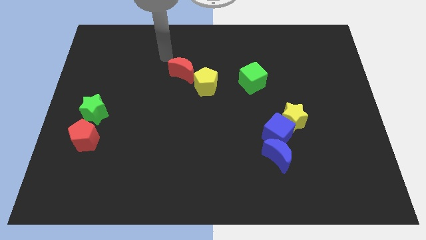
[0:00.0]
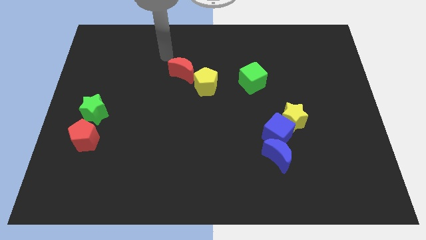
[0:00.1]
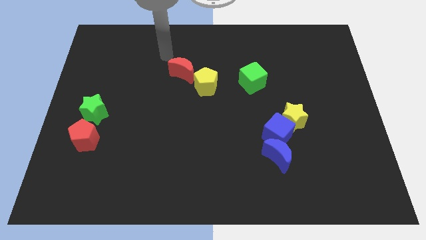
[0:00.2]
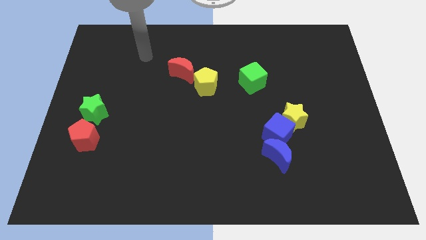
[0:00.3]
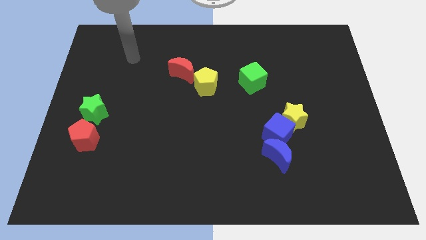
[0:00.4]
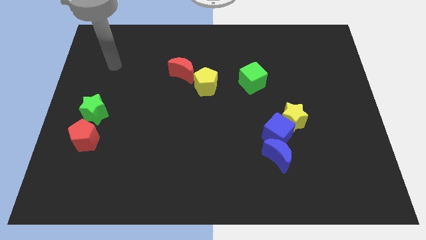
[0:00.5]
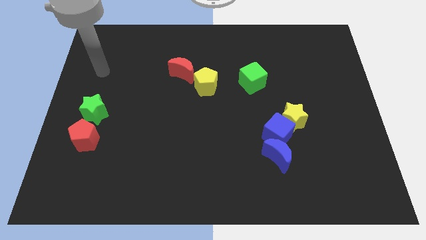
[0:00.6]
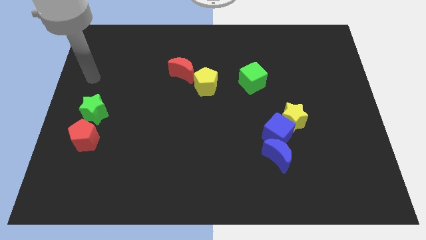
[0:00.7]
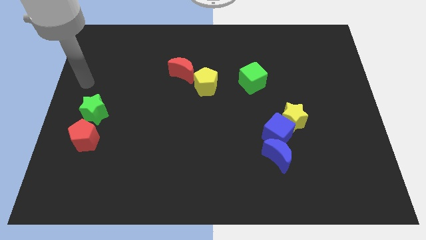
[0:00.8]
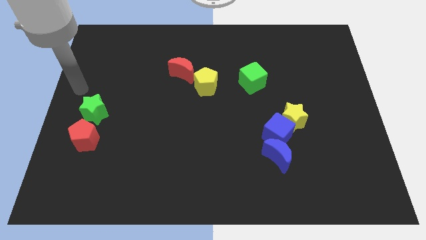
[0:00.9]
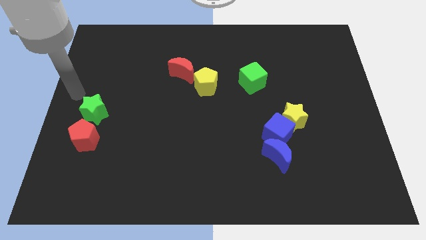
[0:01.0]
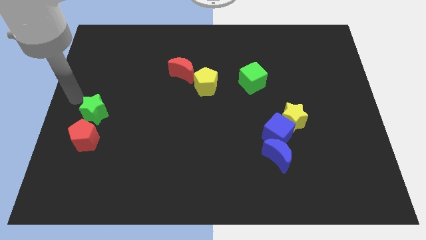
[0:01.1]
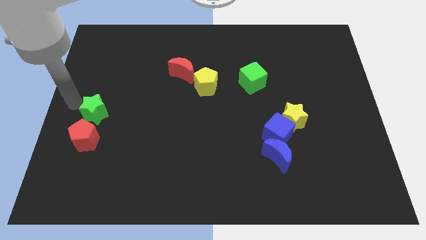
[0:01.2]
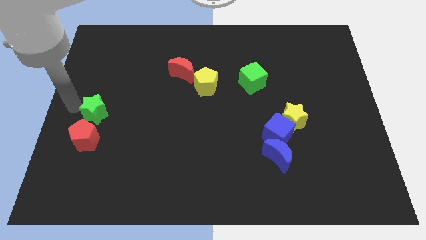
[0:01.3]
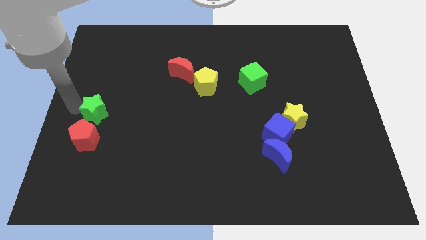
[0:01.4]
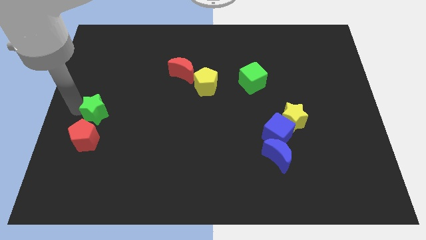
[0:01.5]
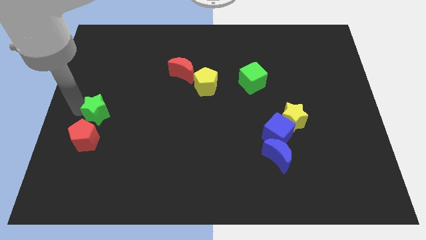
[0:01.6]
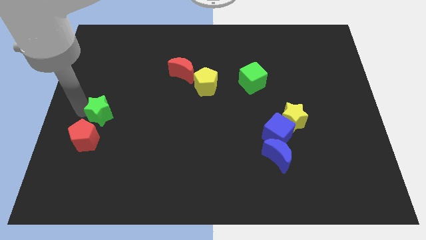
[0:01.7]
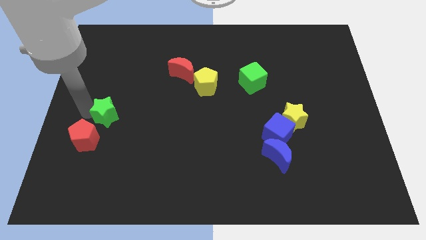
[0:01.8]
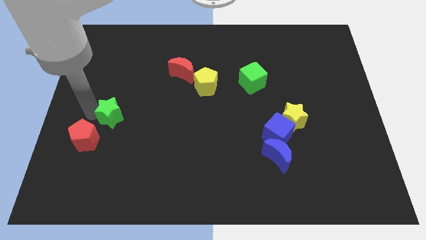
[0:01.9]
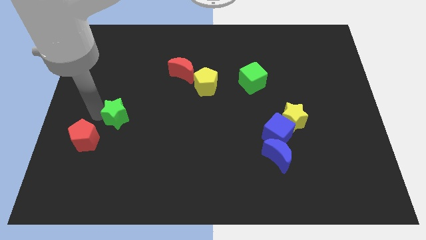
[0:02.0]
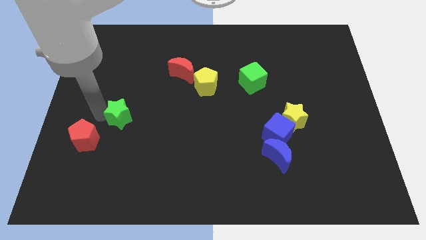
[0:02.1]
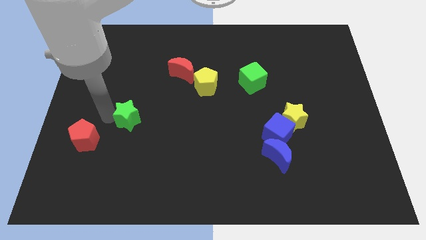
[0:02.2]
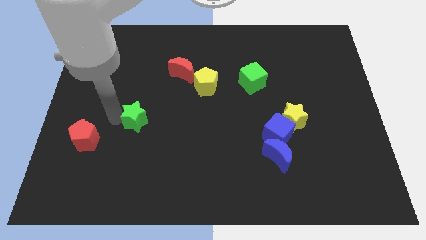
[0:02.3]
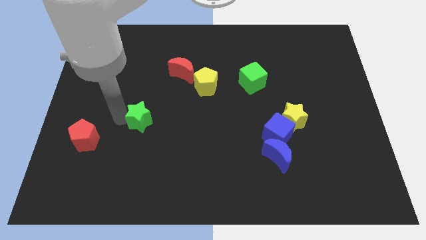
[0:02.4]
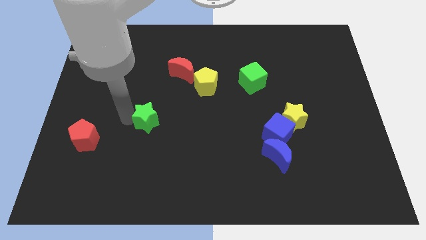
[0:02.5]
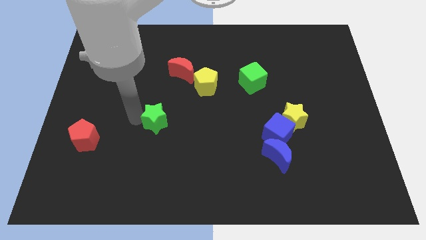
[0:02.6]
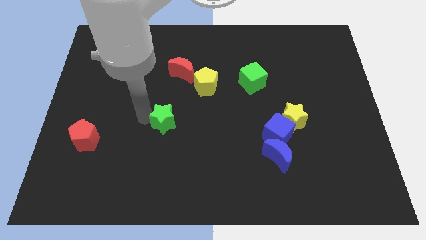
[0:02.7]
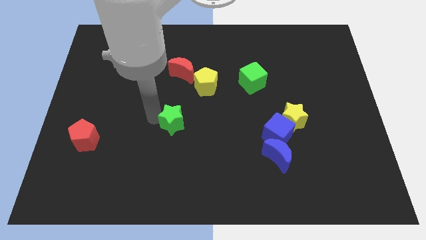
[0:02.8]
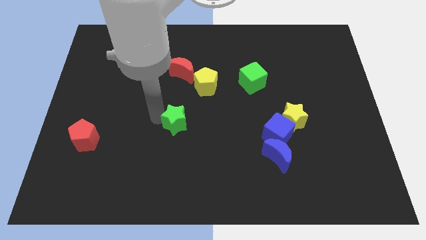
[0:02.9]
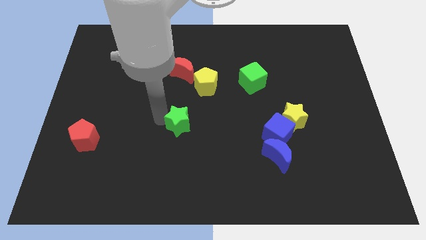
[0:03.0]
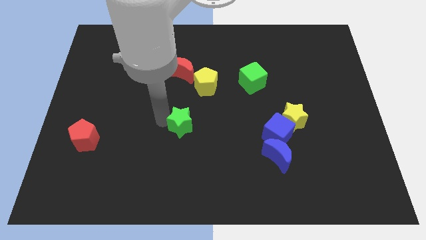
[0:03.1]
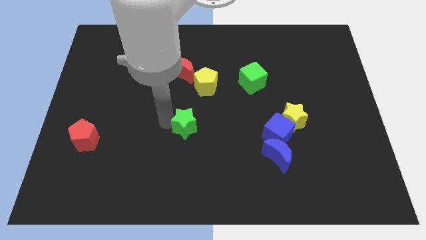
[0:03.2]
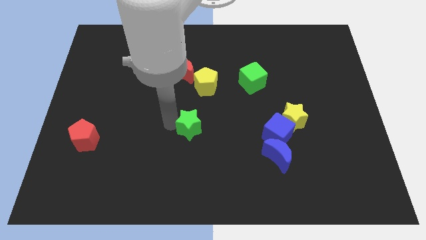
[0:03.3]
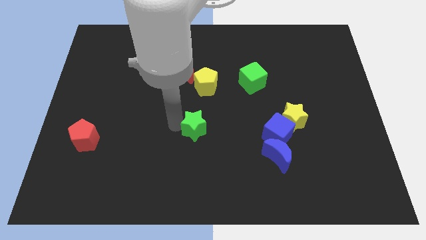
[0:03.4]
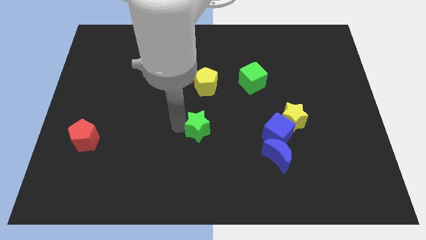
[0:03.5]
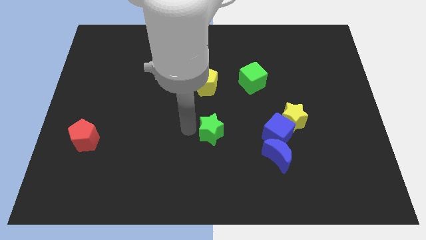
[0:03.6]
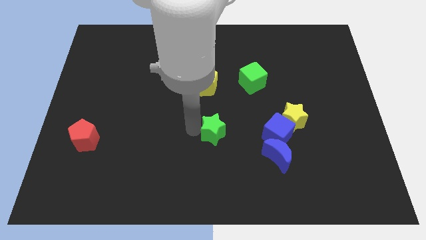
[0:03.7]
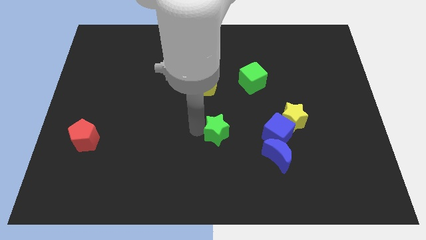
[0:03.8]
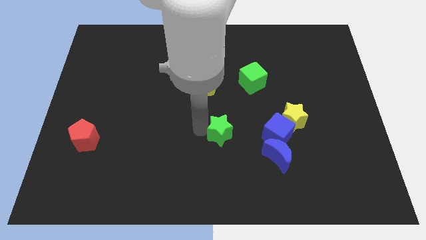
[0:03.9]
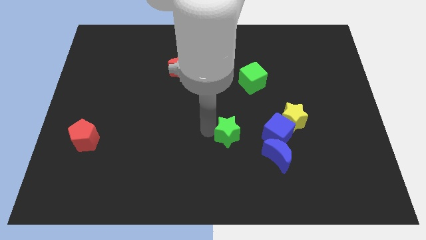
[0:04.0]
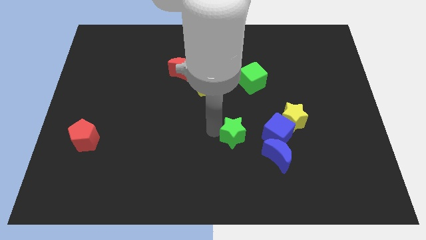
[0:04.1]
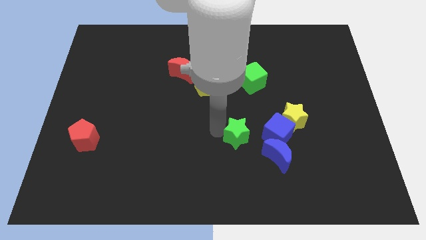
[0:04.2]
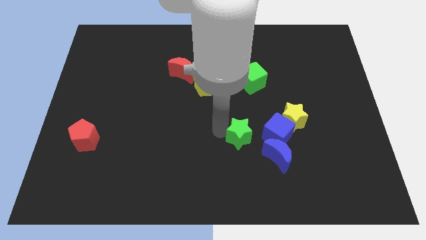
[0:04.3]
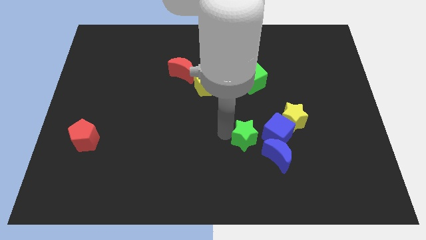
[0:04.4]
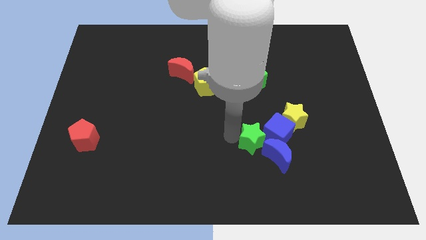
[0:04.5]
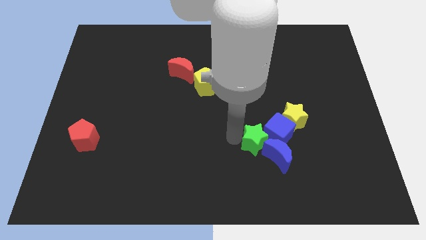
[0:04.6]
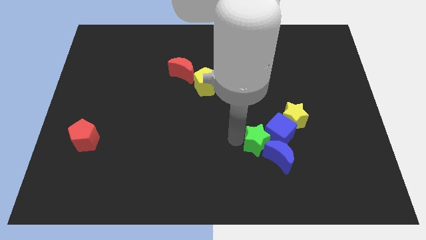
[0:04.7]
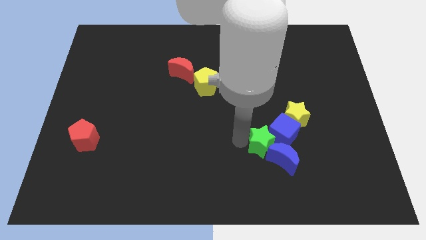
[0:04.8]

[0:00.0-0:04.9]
put the green star towards the blue moon

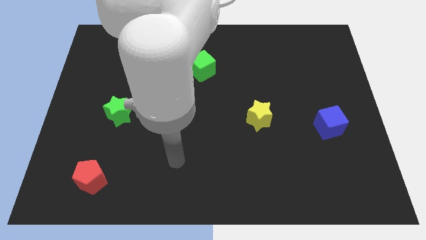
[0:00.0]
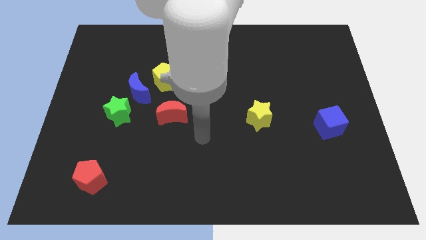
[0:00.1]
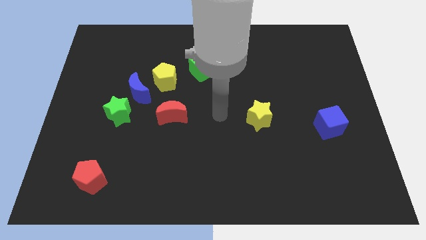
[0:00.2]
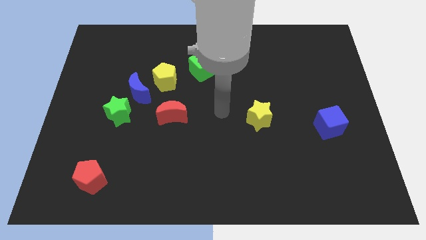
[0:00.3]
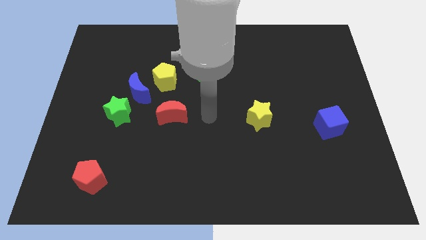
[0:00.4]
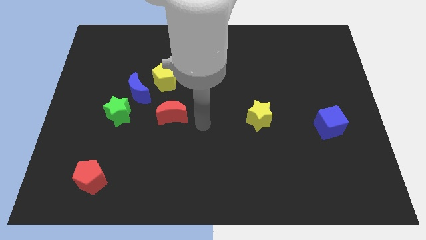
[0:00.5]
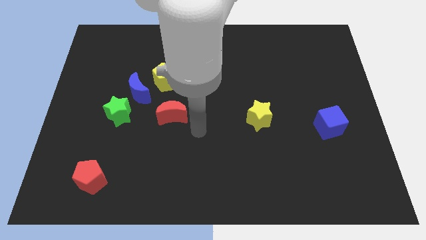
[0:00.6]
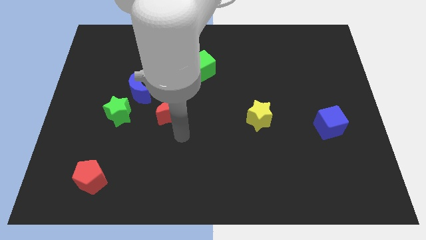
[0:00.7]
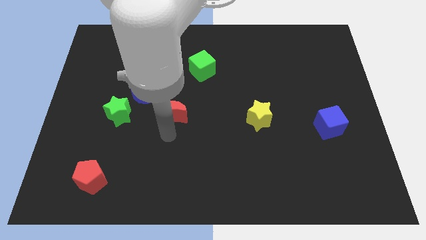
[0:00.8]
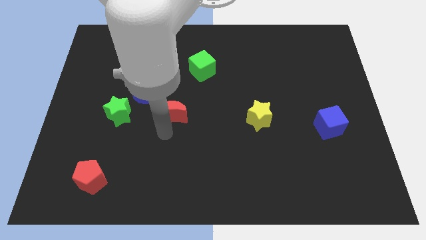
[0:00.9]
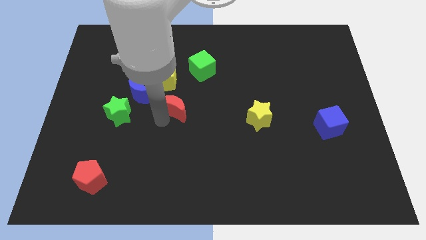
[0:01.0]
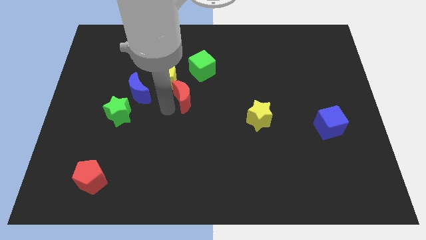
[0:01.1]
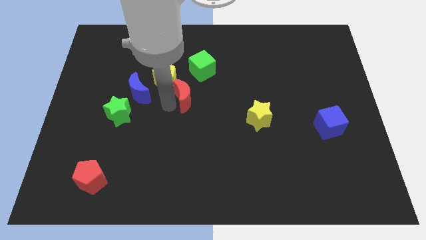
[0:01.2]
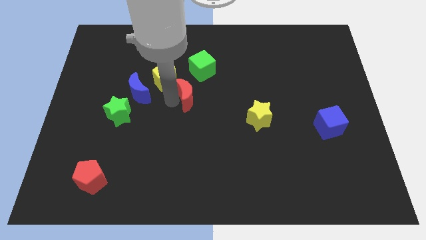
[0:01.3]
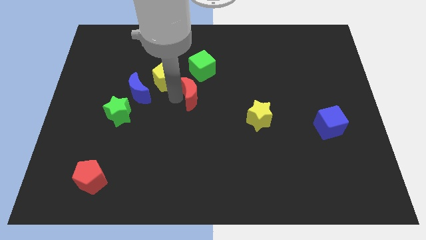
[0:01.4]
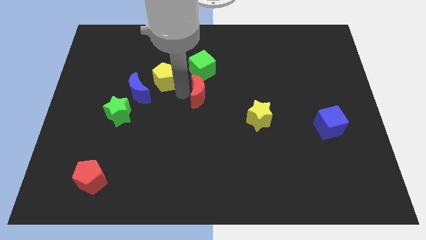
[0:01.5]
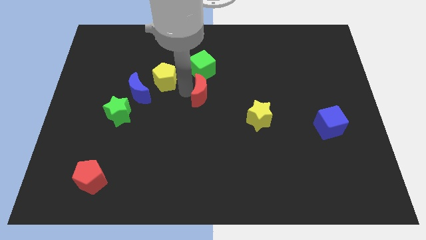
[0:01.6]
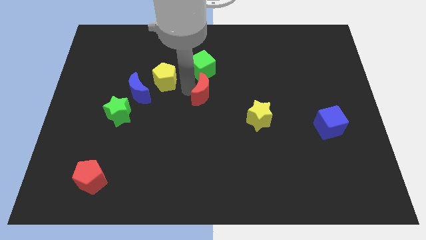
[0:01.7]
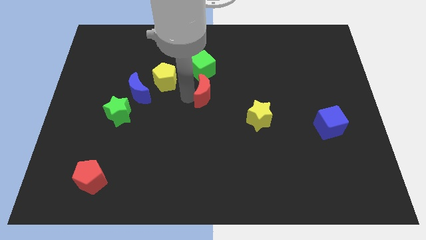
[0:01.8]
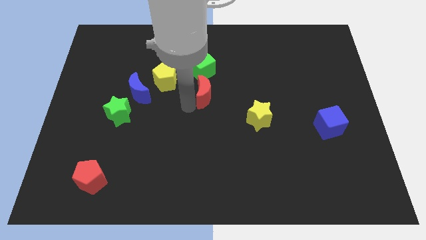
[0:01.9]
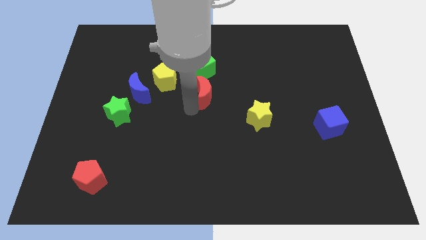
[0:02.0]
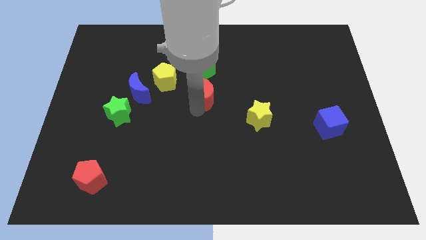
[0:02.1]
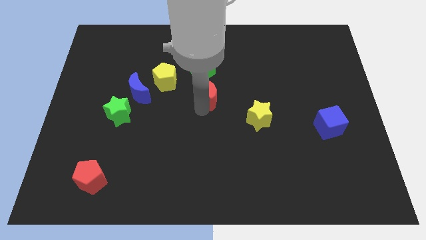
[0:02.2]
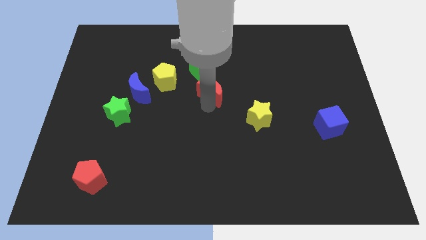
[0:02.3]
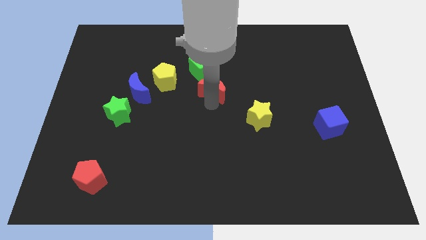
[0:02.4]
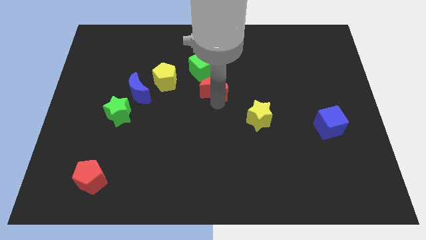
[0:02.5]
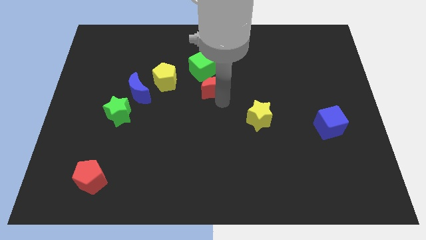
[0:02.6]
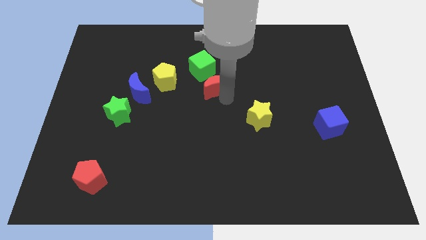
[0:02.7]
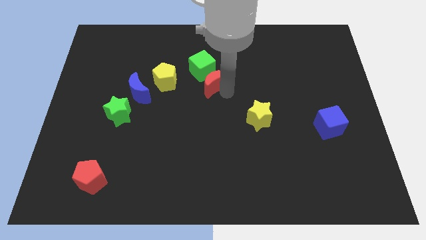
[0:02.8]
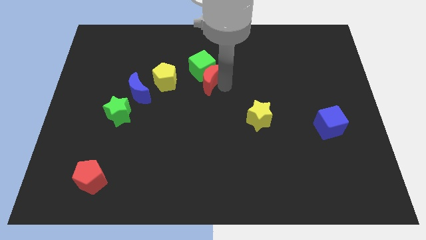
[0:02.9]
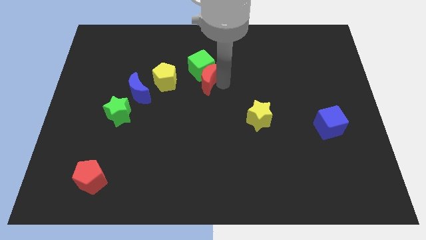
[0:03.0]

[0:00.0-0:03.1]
push the red moon to the green cube

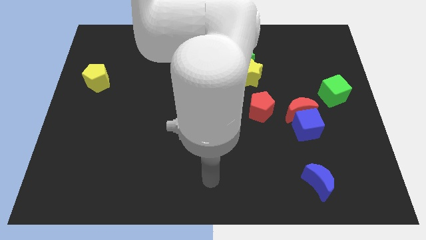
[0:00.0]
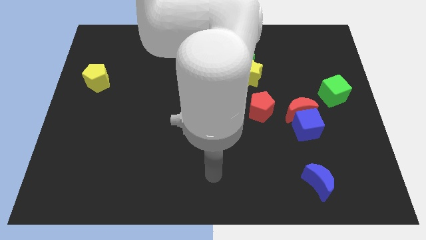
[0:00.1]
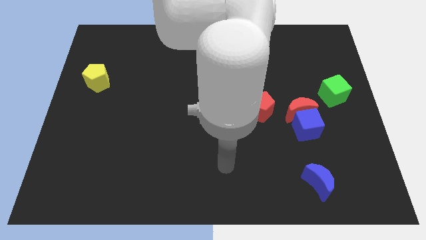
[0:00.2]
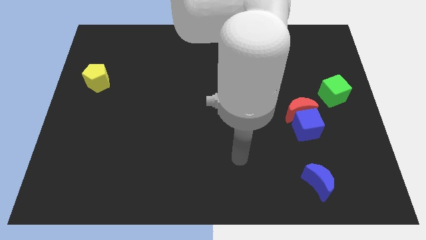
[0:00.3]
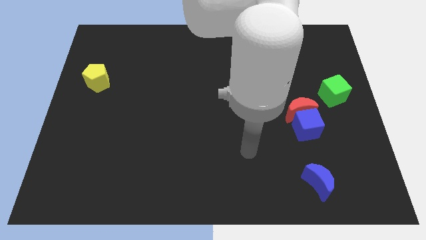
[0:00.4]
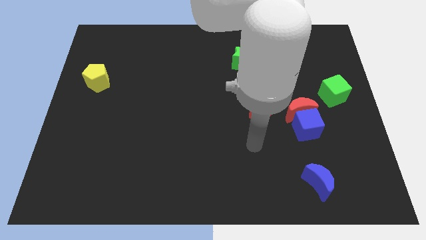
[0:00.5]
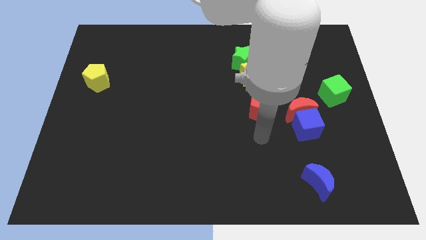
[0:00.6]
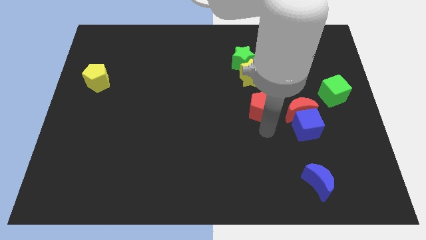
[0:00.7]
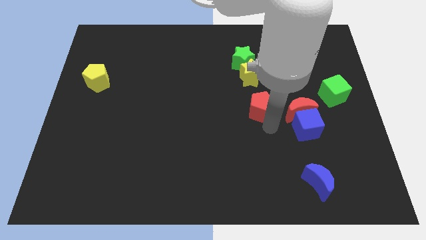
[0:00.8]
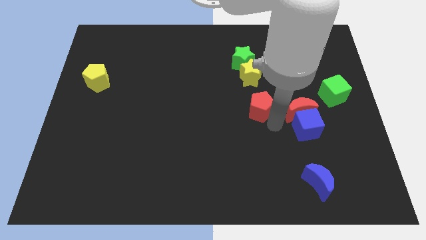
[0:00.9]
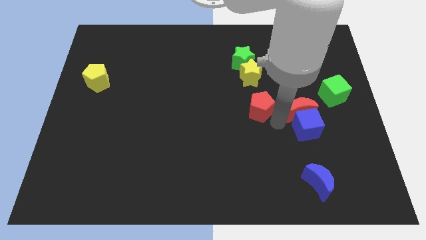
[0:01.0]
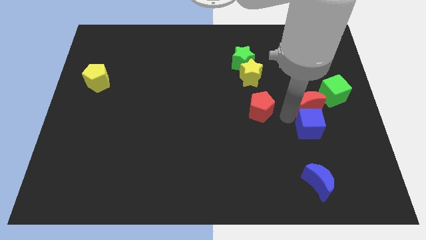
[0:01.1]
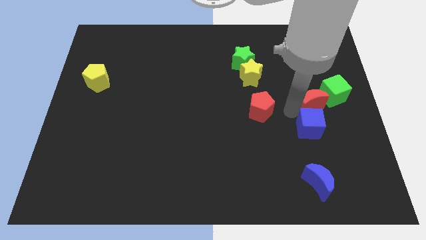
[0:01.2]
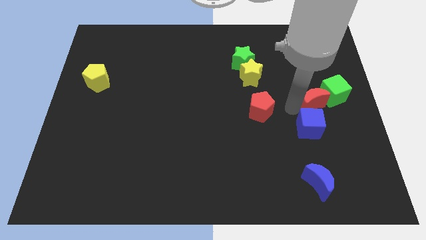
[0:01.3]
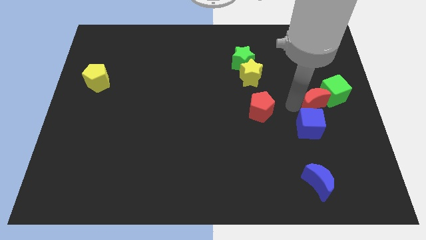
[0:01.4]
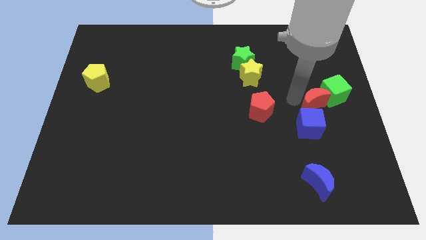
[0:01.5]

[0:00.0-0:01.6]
move the red moon to the green cube
